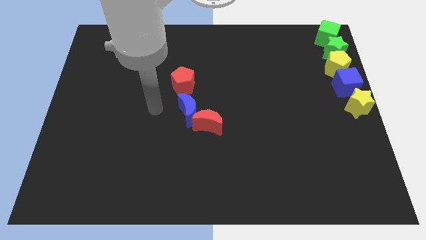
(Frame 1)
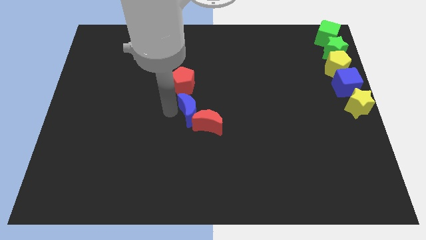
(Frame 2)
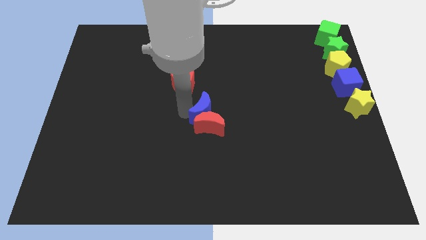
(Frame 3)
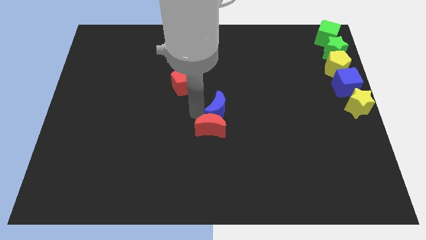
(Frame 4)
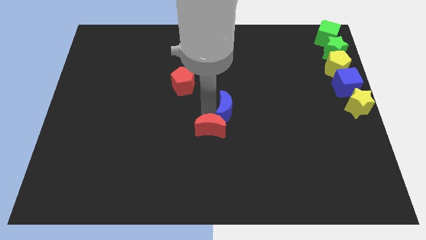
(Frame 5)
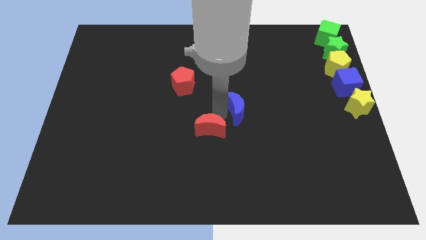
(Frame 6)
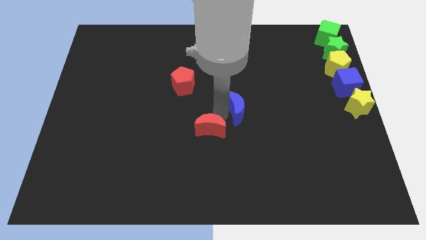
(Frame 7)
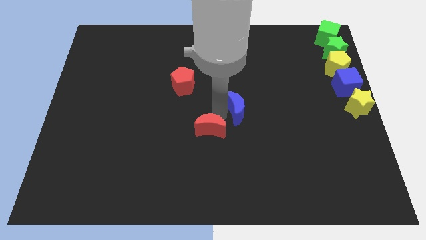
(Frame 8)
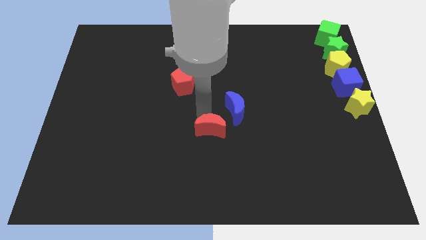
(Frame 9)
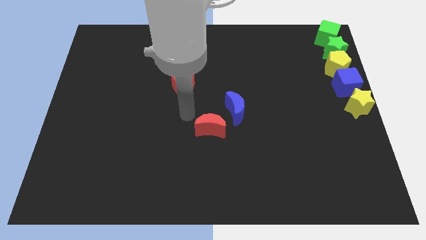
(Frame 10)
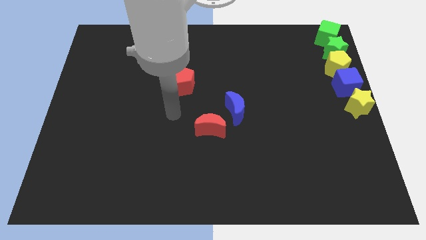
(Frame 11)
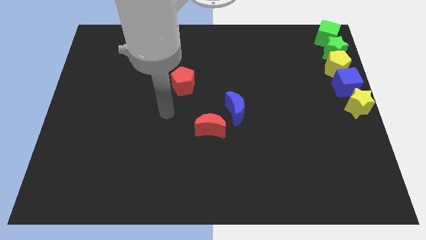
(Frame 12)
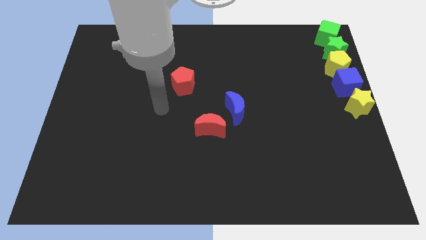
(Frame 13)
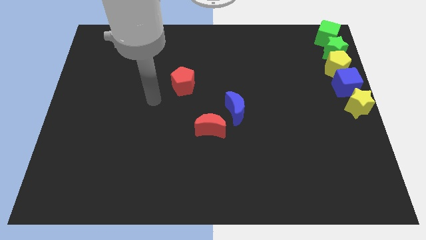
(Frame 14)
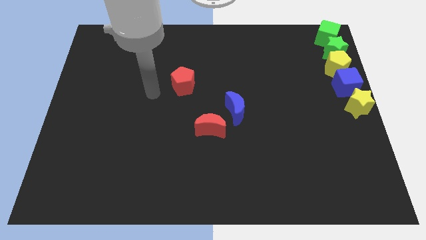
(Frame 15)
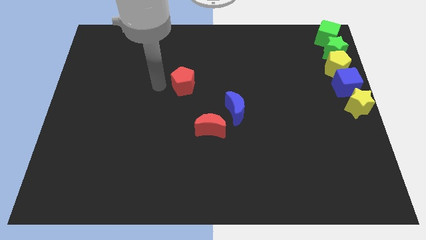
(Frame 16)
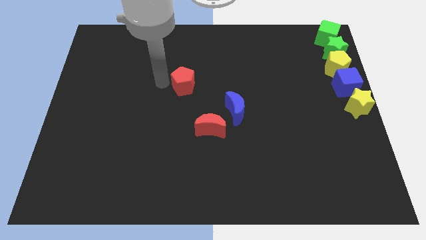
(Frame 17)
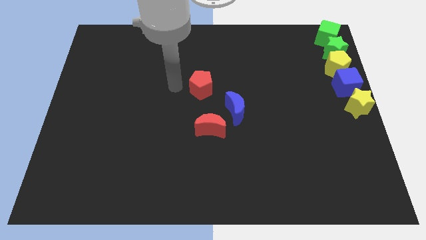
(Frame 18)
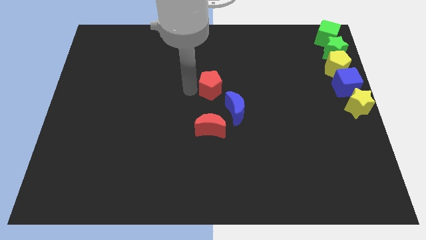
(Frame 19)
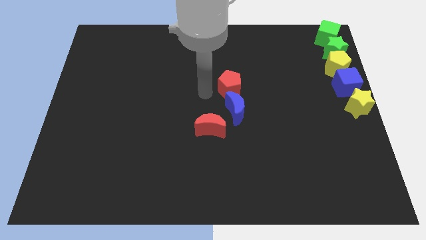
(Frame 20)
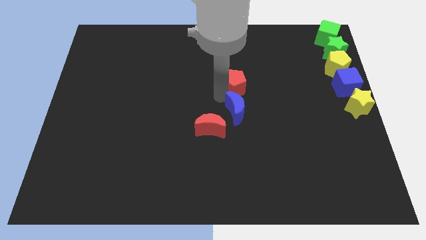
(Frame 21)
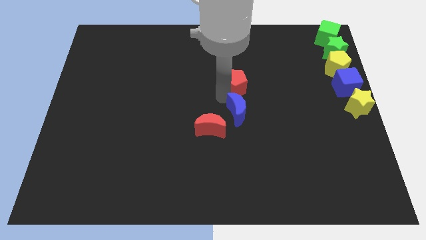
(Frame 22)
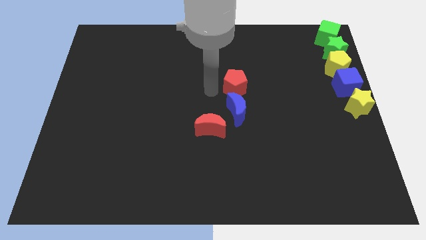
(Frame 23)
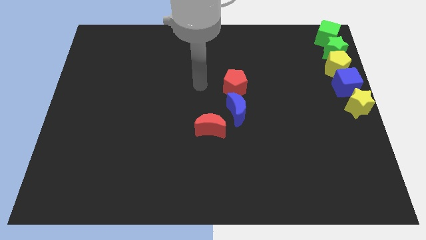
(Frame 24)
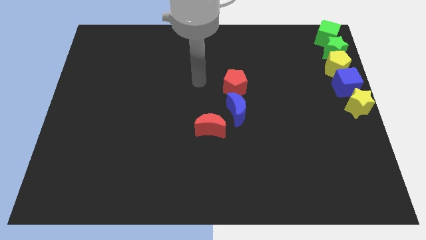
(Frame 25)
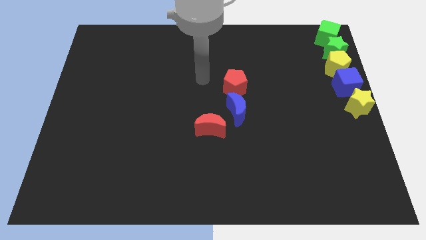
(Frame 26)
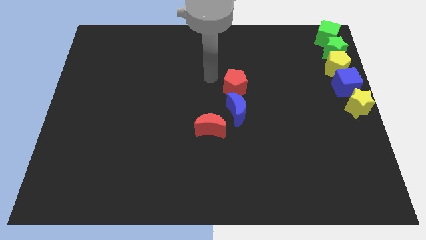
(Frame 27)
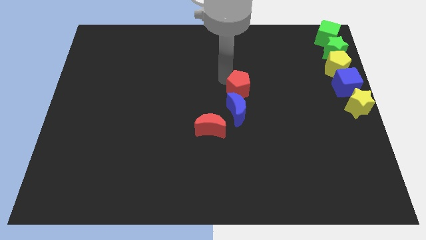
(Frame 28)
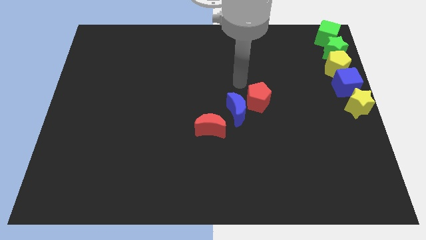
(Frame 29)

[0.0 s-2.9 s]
push the blue crescent and the red pentagon to the right of the board

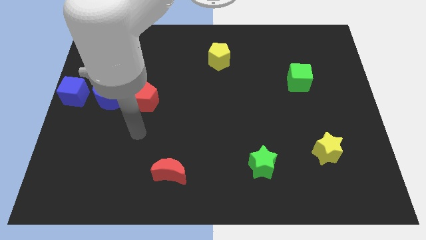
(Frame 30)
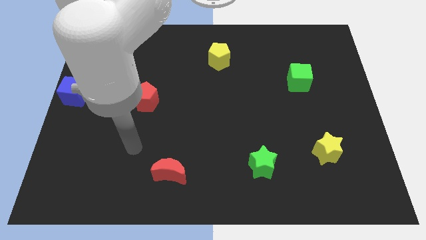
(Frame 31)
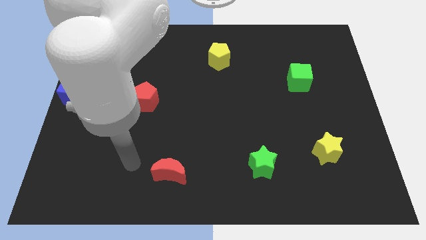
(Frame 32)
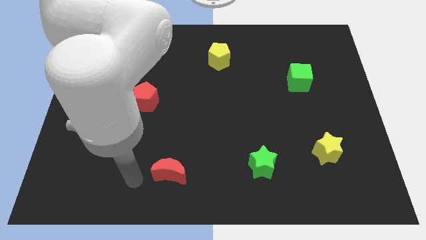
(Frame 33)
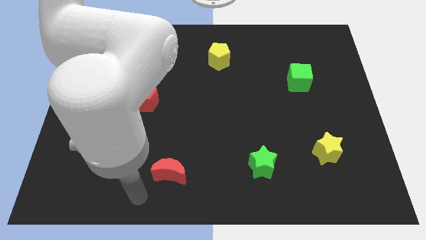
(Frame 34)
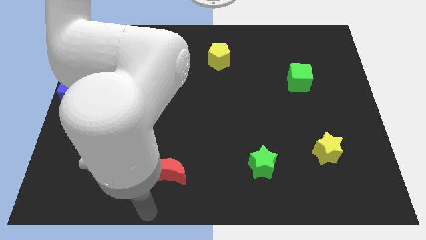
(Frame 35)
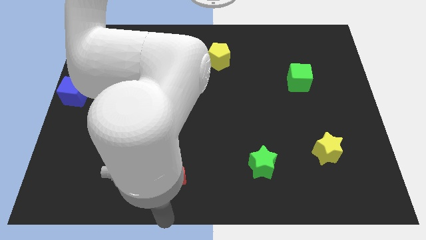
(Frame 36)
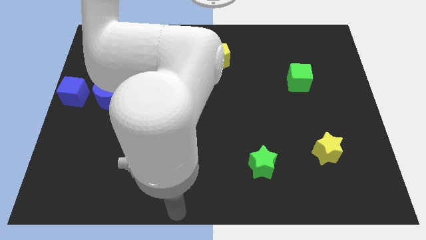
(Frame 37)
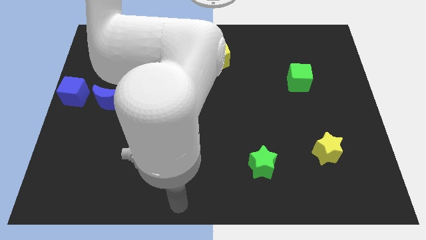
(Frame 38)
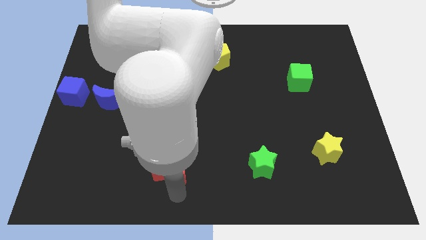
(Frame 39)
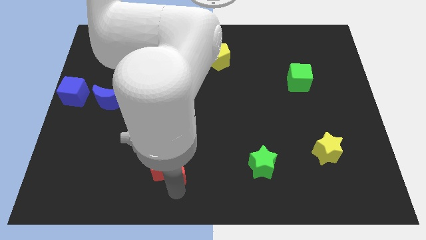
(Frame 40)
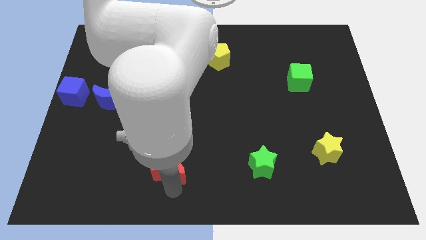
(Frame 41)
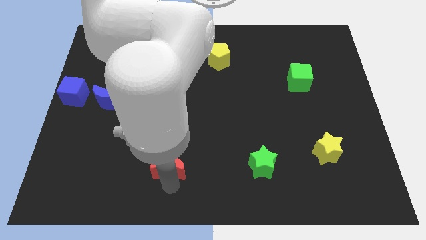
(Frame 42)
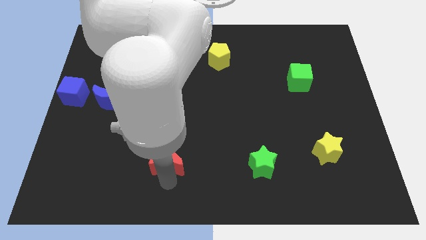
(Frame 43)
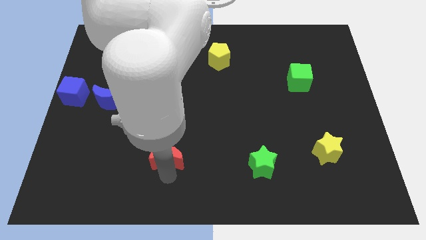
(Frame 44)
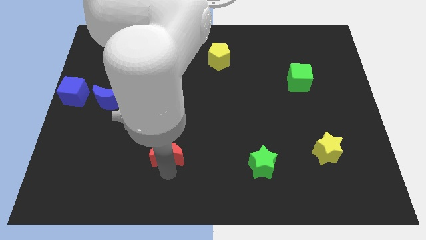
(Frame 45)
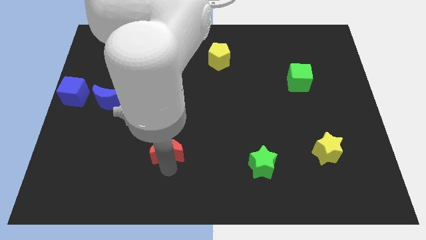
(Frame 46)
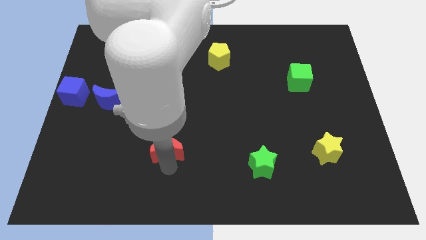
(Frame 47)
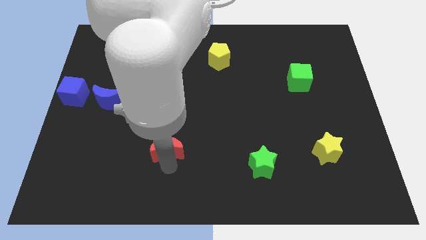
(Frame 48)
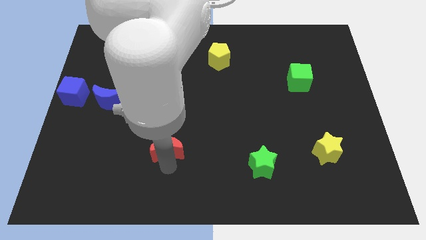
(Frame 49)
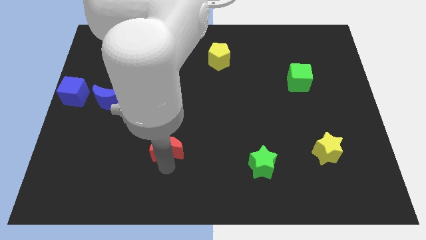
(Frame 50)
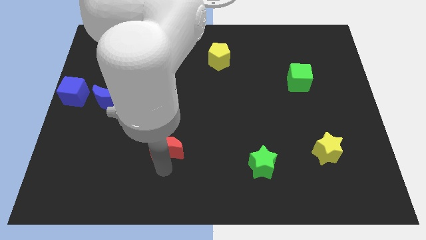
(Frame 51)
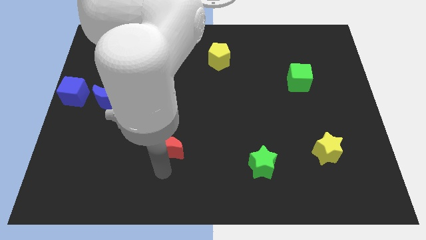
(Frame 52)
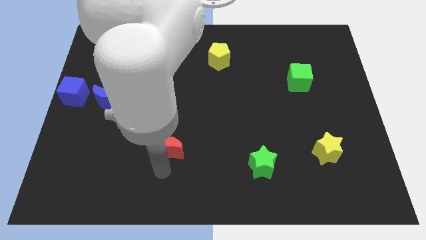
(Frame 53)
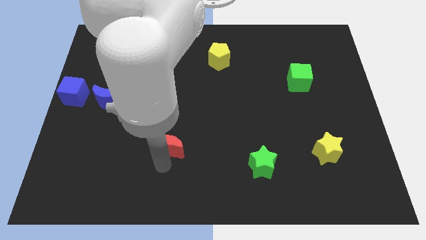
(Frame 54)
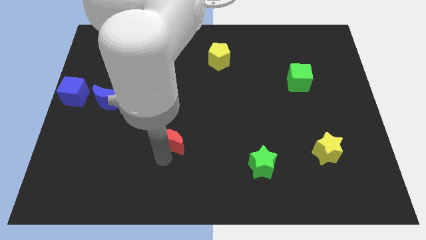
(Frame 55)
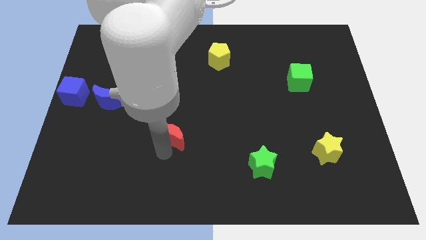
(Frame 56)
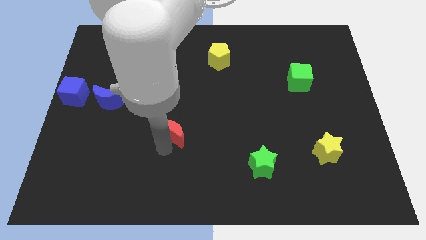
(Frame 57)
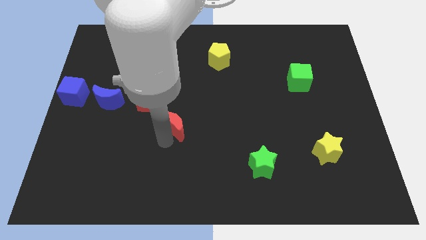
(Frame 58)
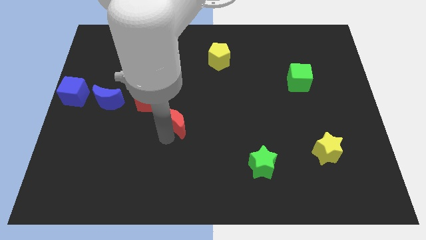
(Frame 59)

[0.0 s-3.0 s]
put the red moon at the bottom right side of the red pentagon

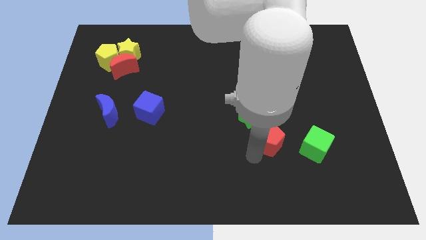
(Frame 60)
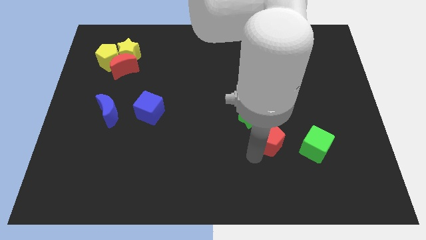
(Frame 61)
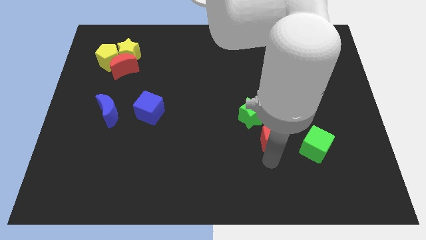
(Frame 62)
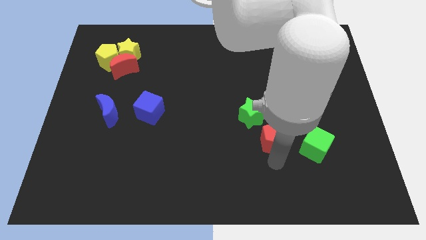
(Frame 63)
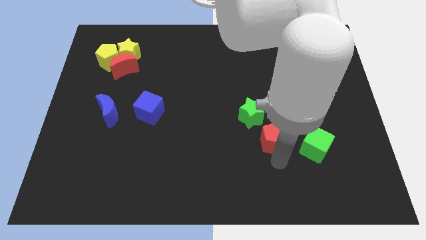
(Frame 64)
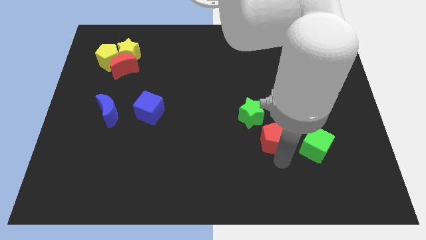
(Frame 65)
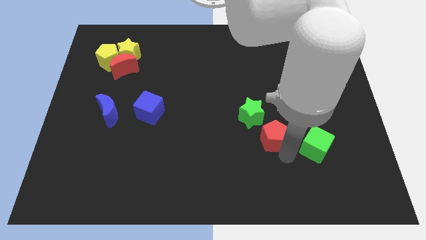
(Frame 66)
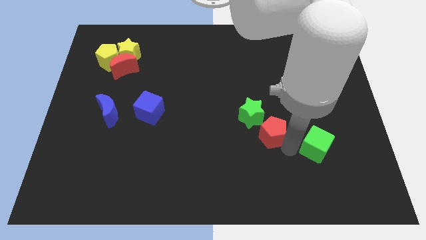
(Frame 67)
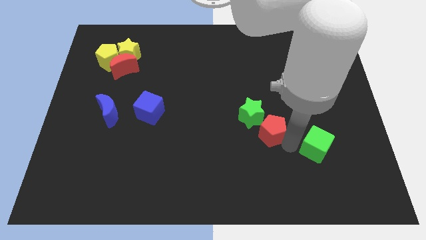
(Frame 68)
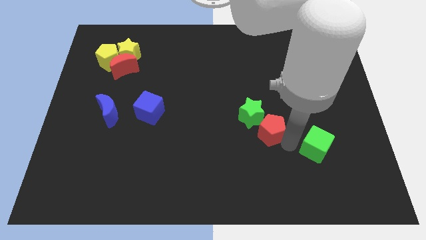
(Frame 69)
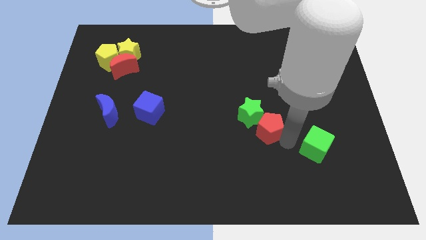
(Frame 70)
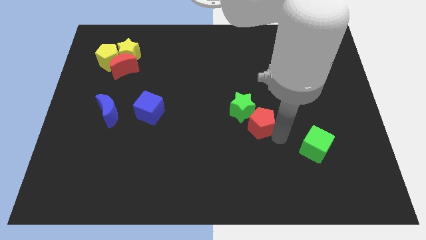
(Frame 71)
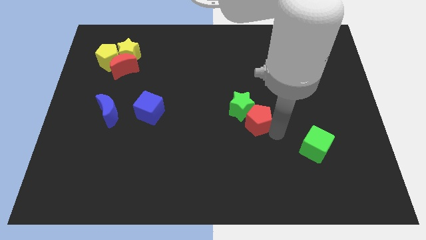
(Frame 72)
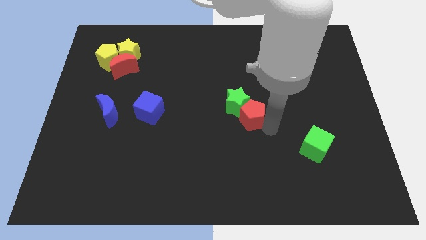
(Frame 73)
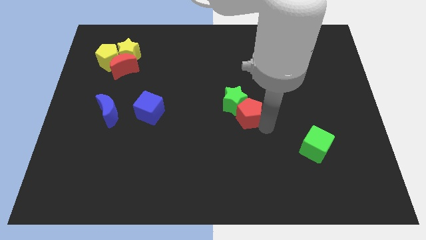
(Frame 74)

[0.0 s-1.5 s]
move the red pentagon into the green star

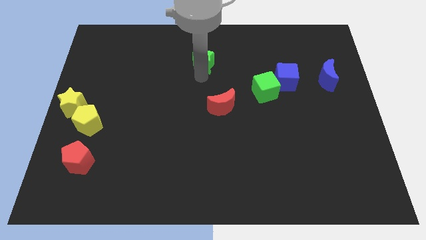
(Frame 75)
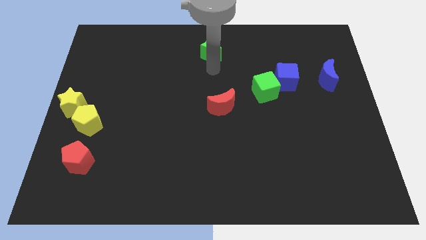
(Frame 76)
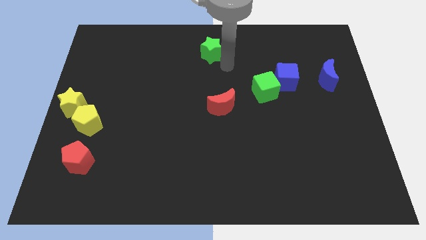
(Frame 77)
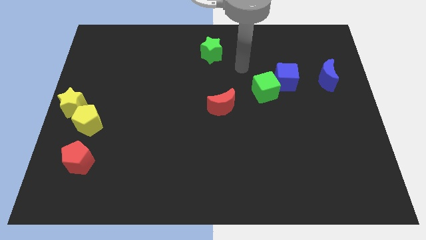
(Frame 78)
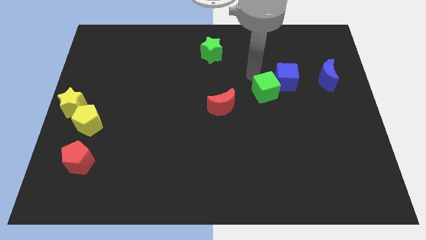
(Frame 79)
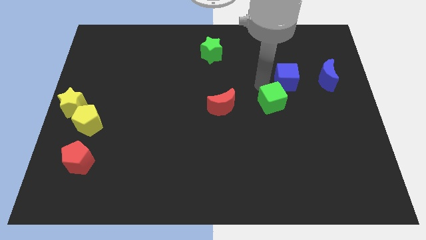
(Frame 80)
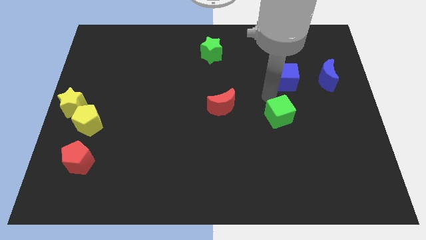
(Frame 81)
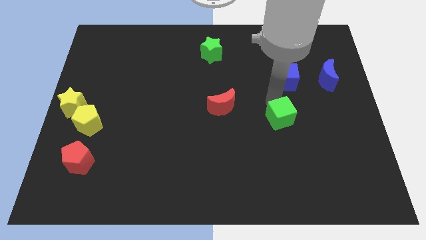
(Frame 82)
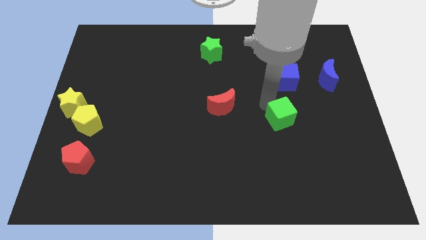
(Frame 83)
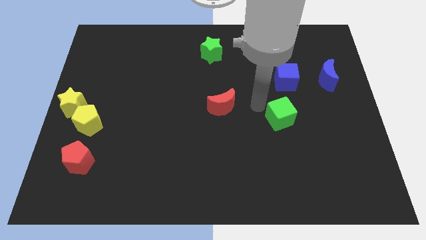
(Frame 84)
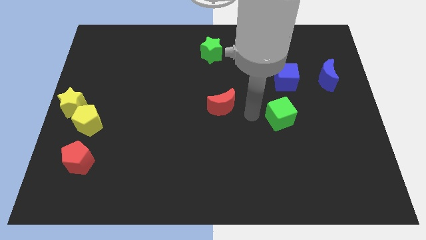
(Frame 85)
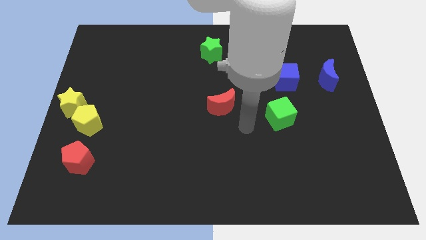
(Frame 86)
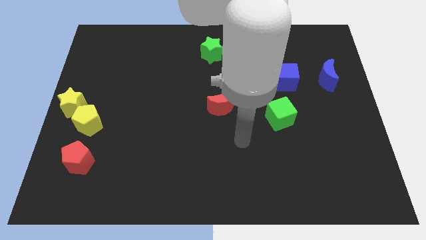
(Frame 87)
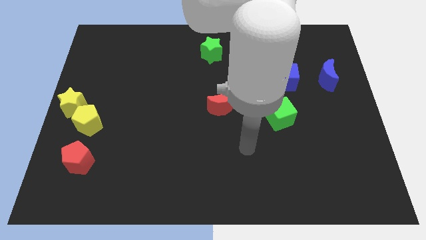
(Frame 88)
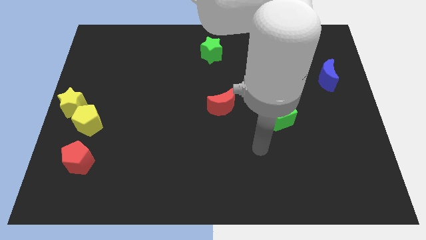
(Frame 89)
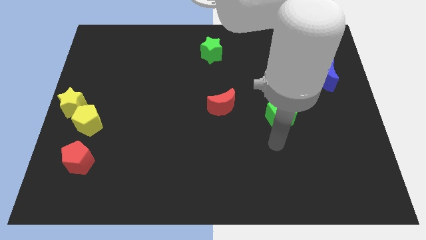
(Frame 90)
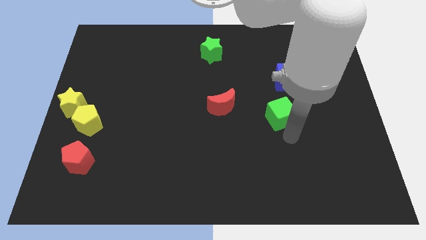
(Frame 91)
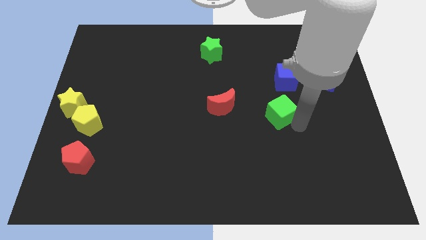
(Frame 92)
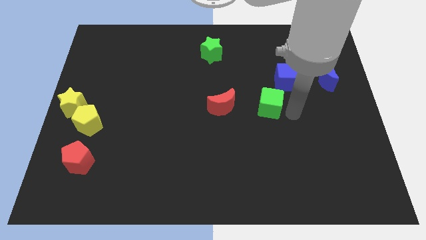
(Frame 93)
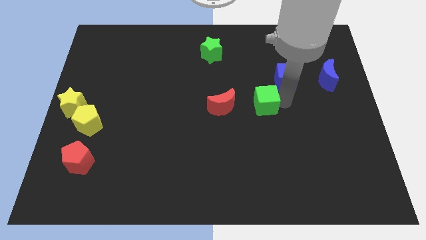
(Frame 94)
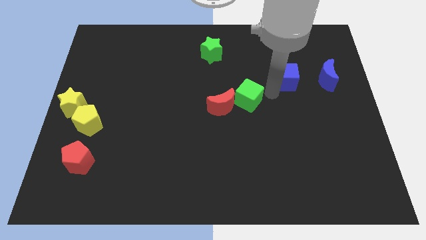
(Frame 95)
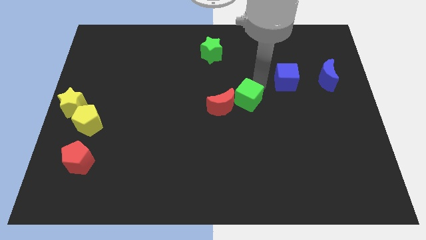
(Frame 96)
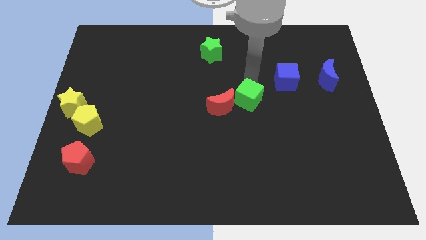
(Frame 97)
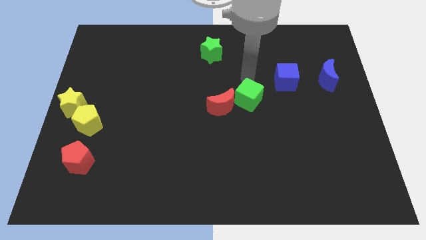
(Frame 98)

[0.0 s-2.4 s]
place the green cube right to the red moon
